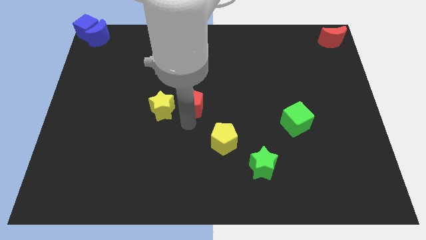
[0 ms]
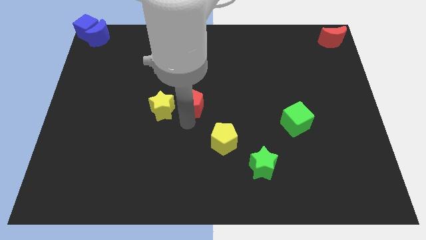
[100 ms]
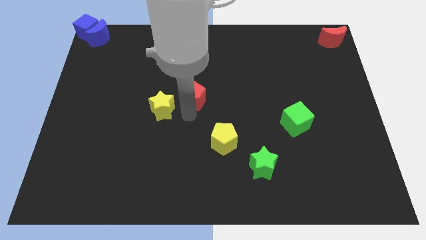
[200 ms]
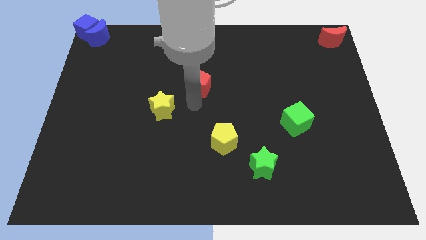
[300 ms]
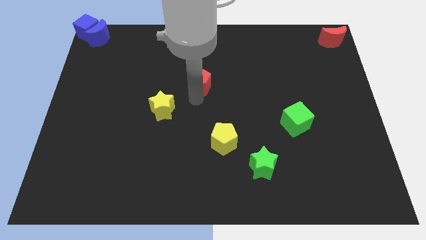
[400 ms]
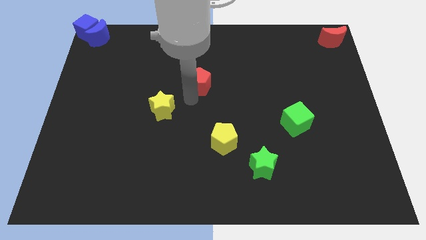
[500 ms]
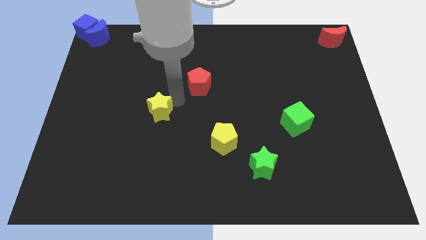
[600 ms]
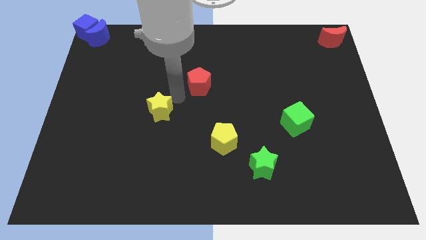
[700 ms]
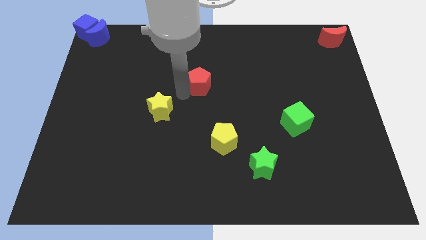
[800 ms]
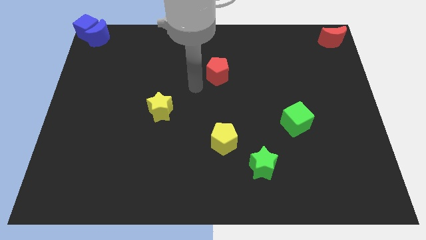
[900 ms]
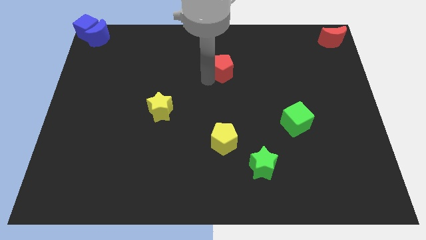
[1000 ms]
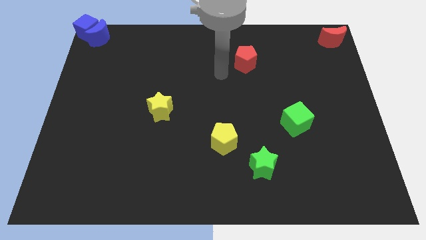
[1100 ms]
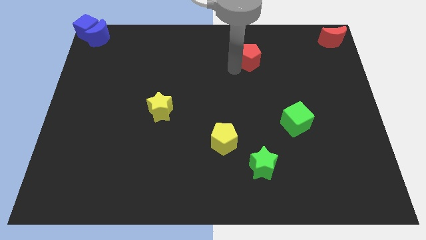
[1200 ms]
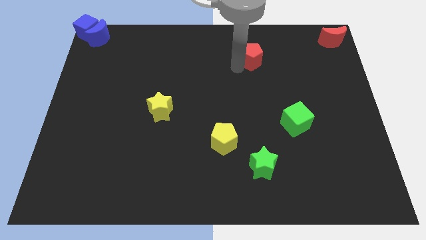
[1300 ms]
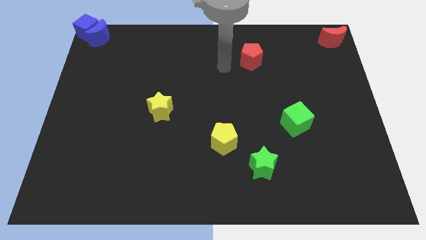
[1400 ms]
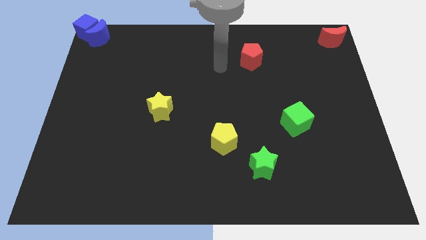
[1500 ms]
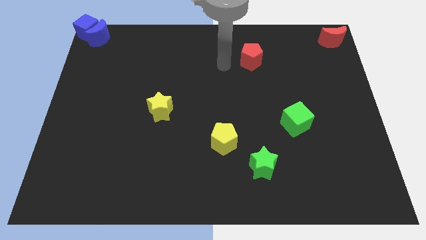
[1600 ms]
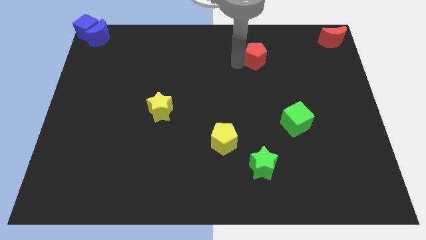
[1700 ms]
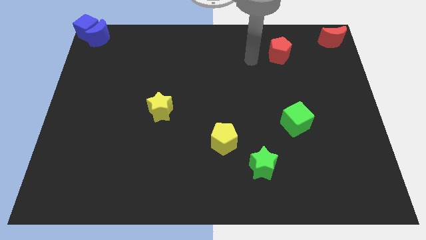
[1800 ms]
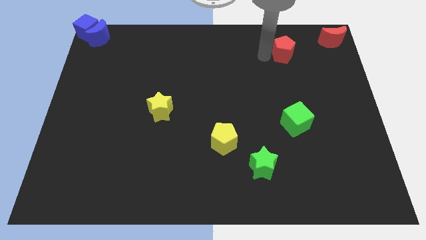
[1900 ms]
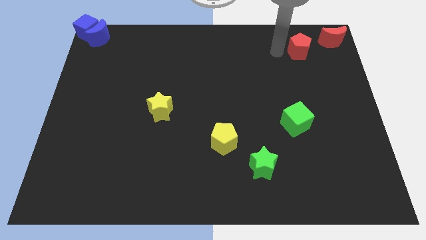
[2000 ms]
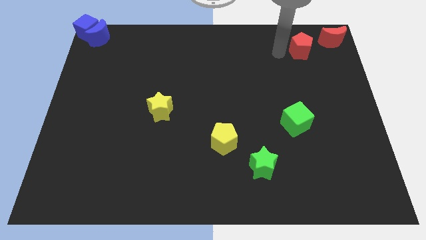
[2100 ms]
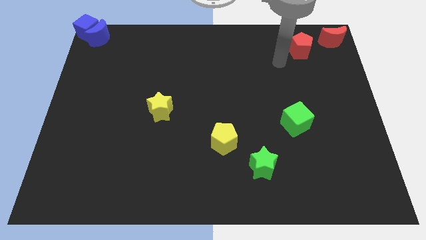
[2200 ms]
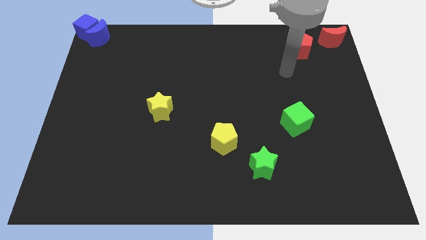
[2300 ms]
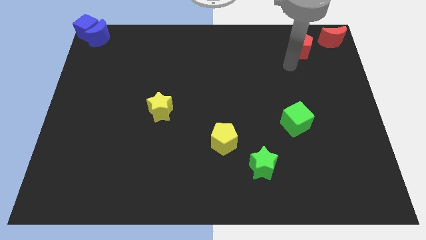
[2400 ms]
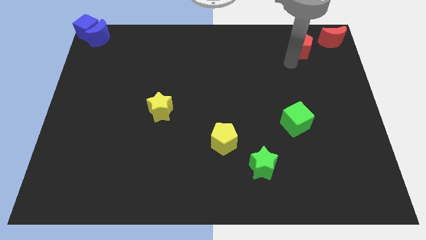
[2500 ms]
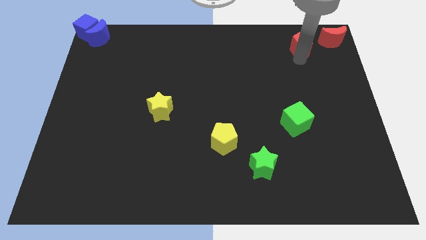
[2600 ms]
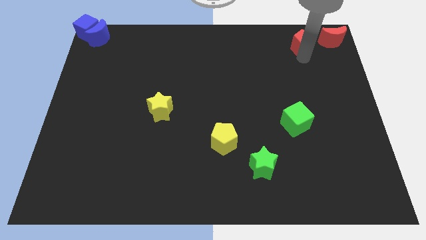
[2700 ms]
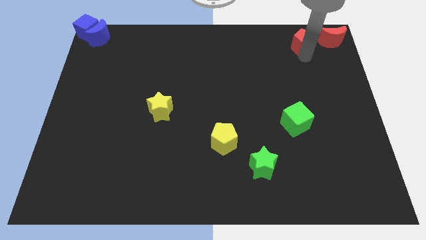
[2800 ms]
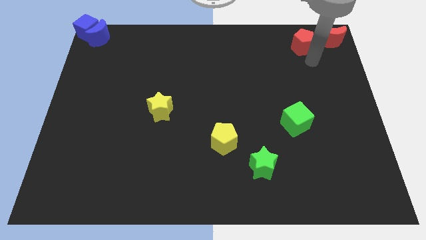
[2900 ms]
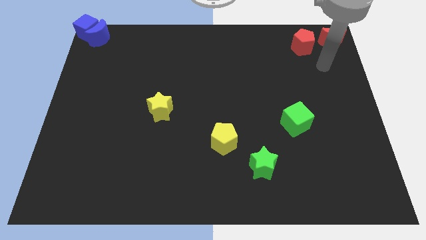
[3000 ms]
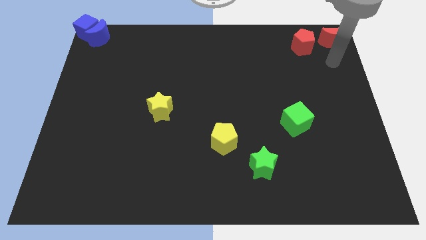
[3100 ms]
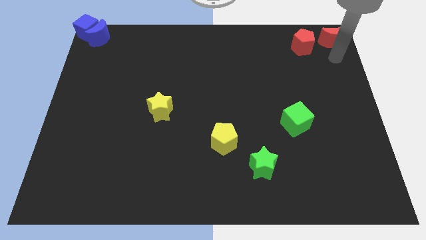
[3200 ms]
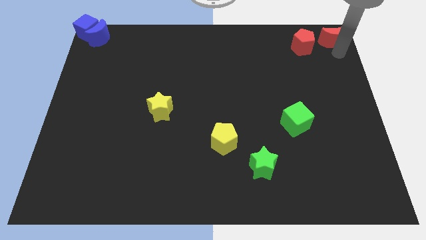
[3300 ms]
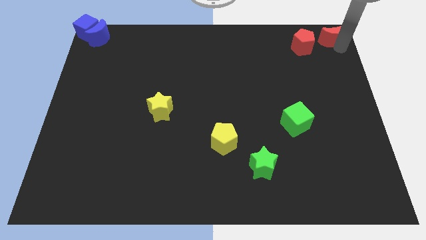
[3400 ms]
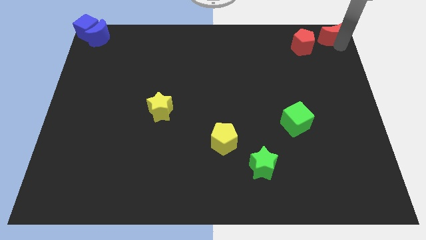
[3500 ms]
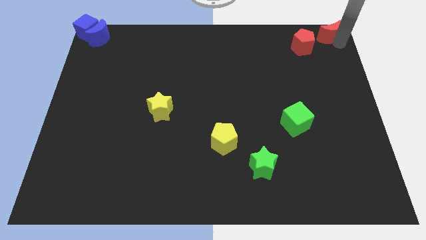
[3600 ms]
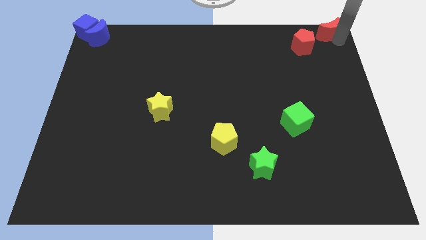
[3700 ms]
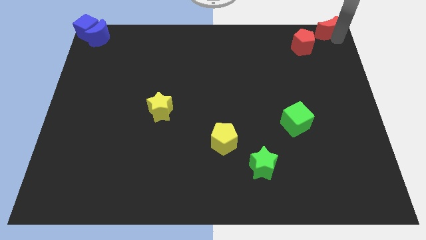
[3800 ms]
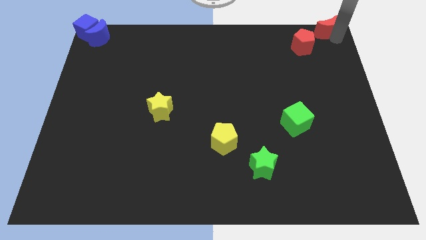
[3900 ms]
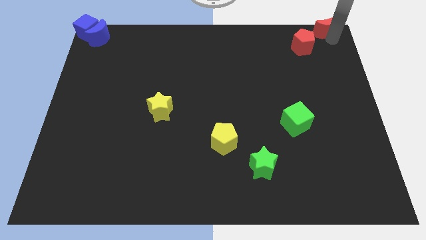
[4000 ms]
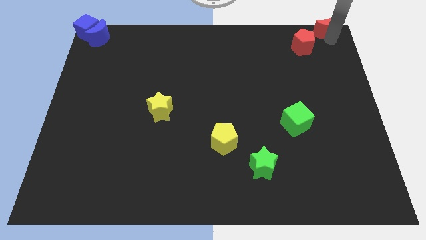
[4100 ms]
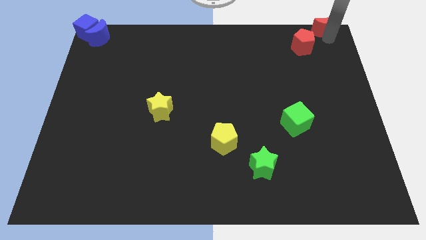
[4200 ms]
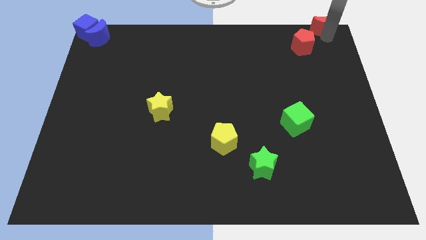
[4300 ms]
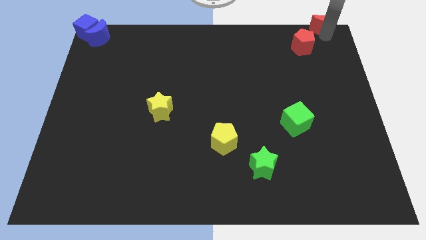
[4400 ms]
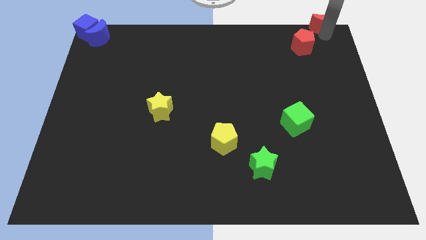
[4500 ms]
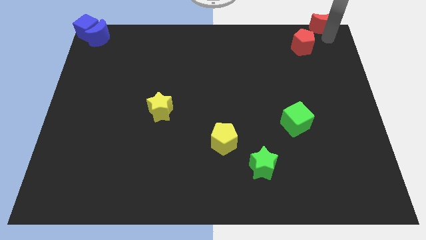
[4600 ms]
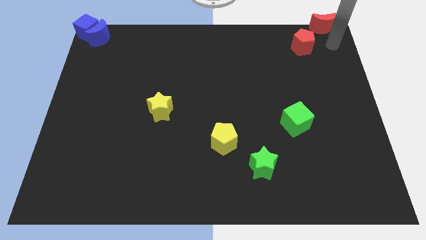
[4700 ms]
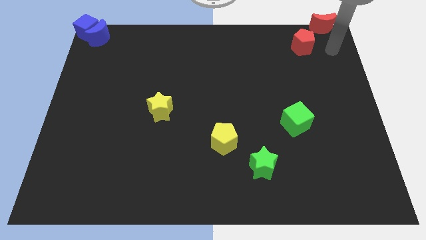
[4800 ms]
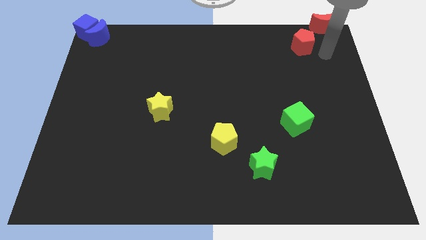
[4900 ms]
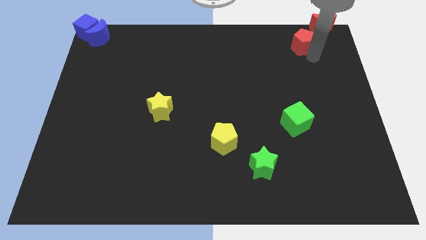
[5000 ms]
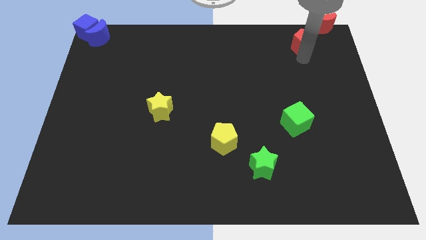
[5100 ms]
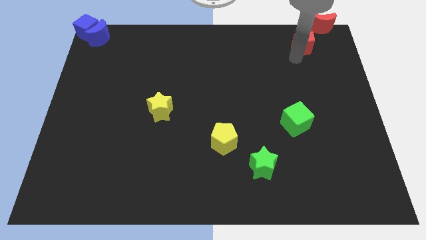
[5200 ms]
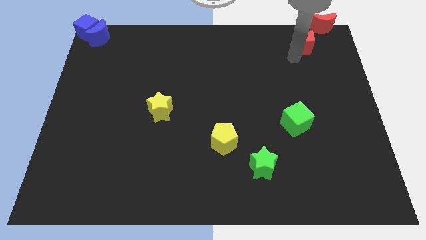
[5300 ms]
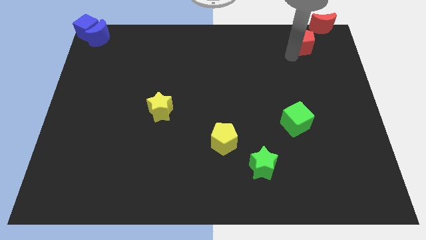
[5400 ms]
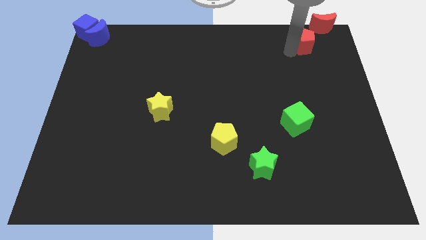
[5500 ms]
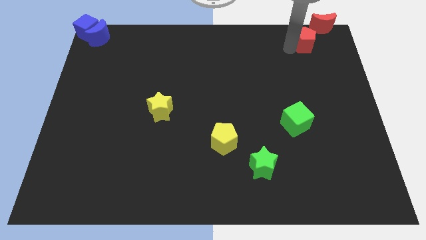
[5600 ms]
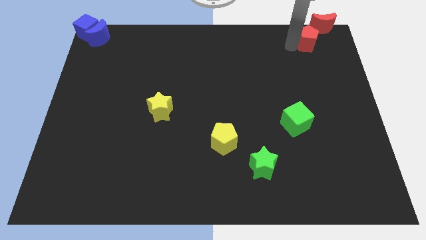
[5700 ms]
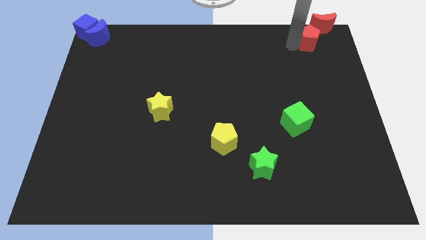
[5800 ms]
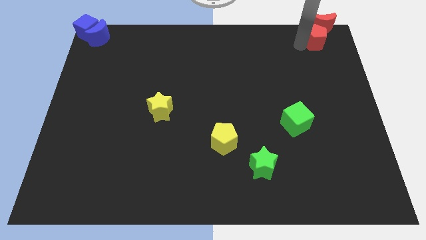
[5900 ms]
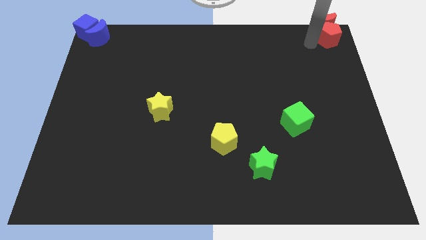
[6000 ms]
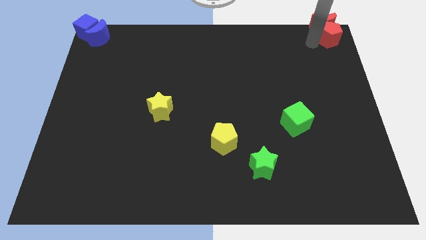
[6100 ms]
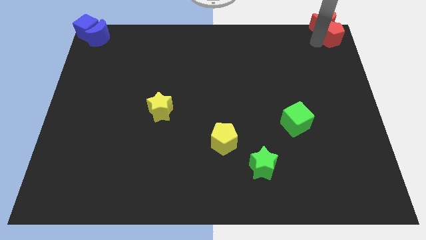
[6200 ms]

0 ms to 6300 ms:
place the red pentagon below the red moon to the top right of the board

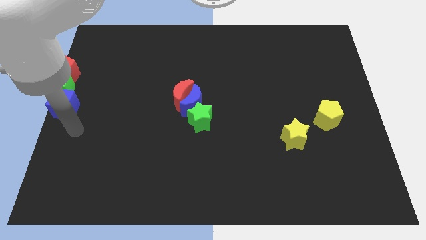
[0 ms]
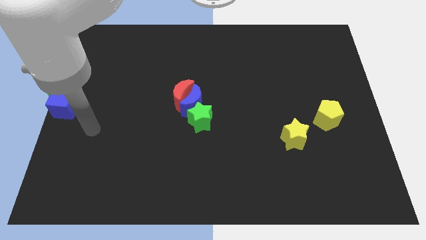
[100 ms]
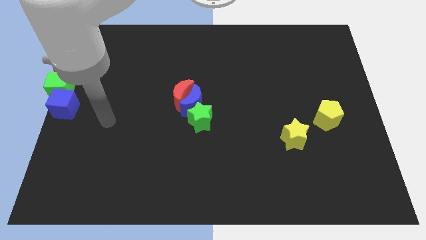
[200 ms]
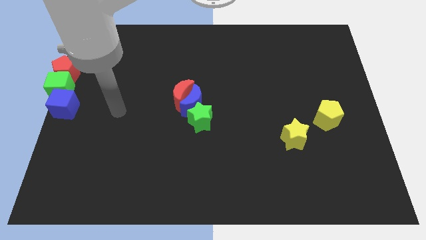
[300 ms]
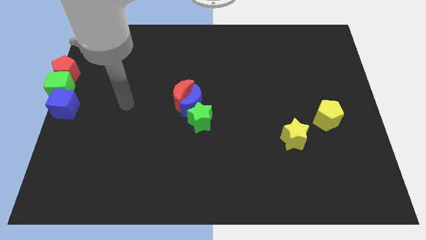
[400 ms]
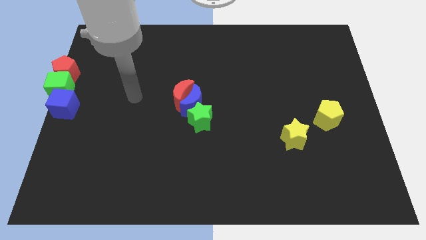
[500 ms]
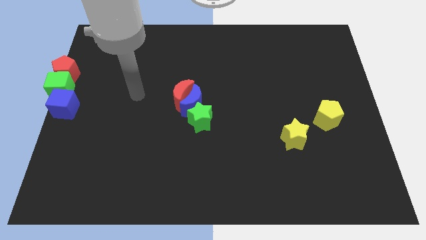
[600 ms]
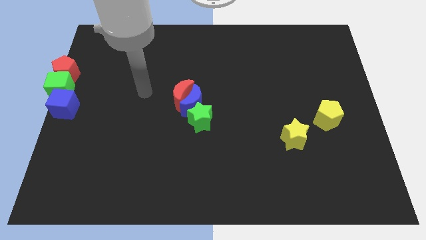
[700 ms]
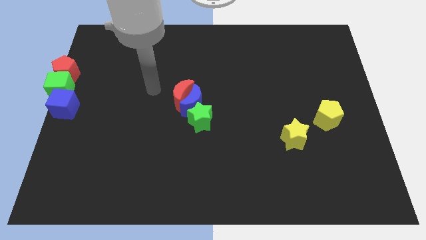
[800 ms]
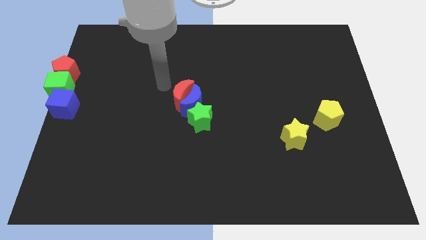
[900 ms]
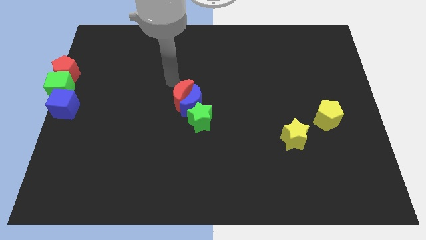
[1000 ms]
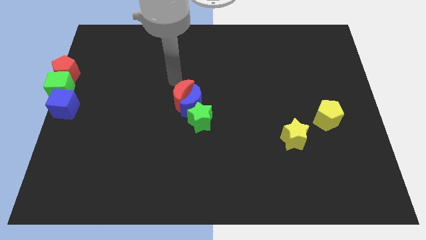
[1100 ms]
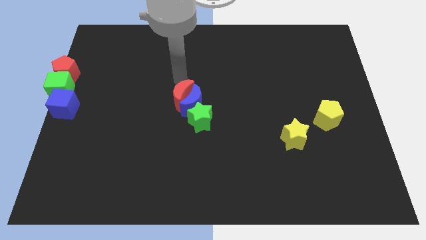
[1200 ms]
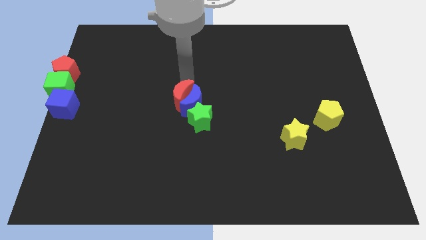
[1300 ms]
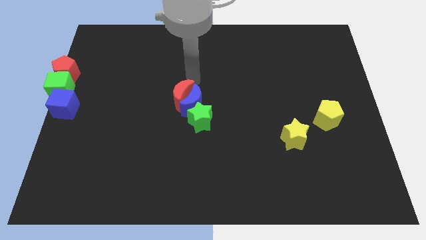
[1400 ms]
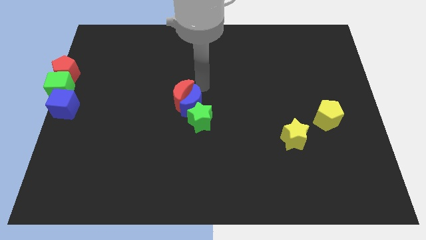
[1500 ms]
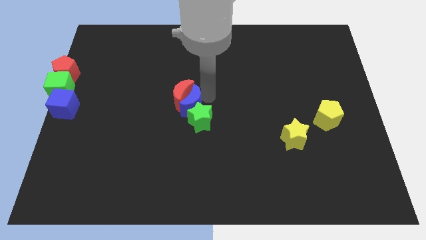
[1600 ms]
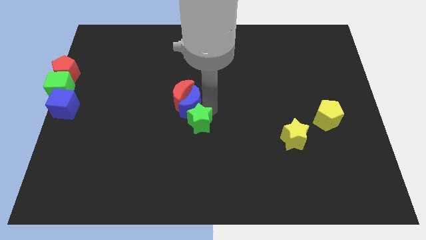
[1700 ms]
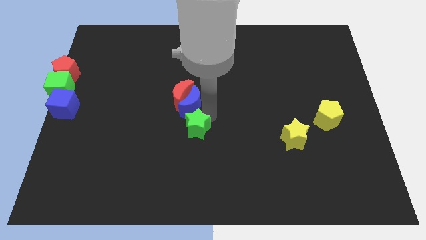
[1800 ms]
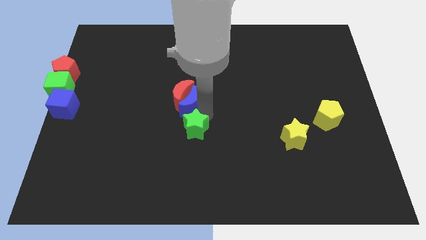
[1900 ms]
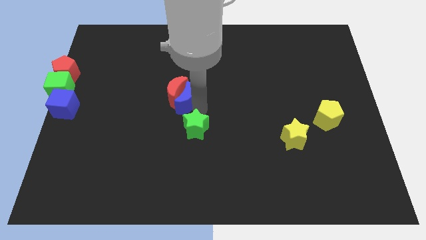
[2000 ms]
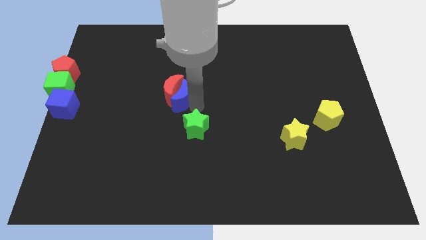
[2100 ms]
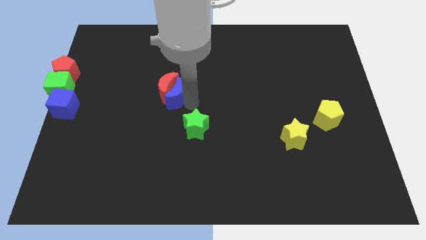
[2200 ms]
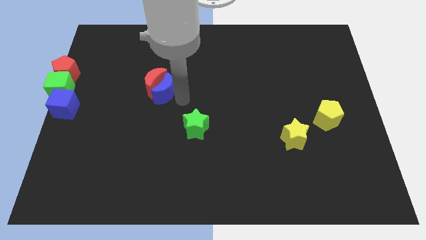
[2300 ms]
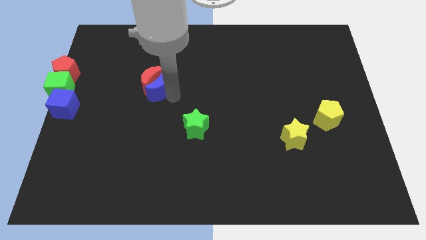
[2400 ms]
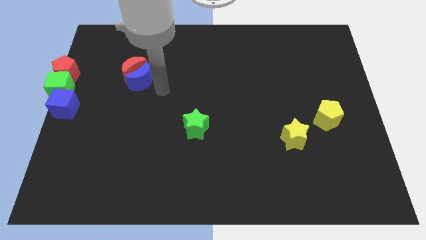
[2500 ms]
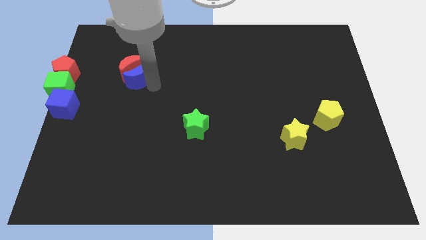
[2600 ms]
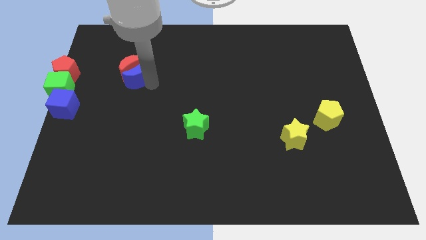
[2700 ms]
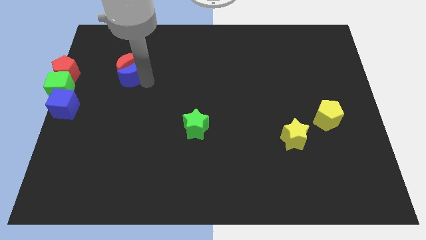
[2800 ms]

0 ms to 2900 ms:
push the red crescent with the help of the blue crescent towards the top left corner side of the board
